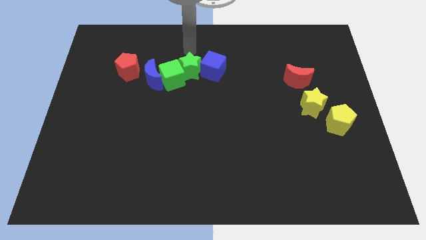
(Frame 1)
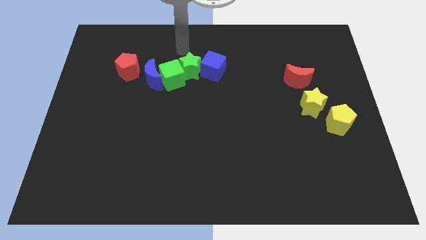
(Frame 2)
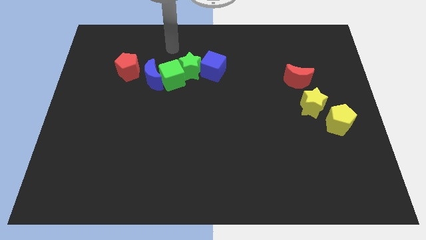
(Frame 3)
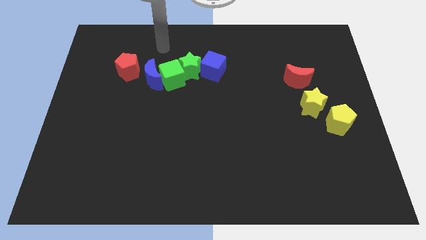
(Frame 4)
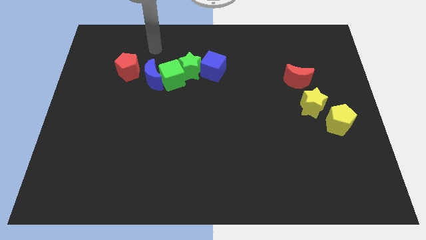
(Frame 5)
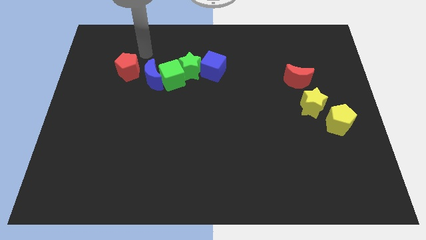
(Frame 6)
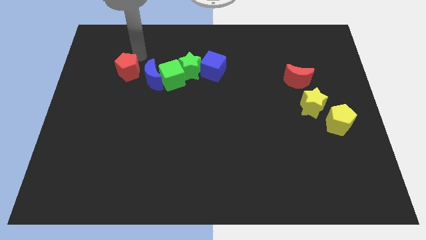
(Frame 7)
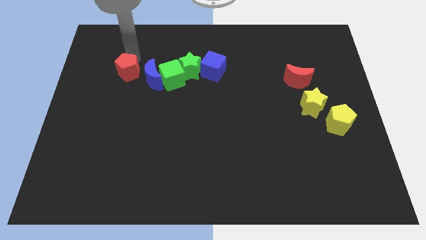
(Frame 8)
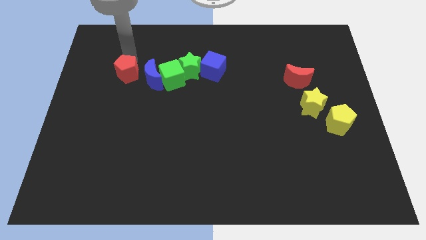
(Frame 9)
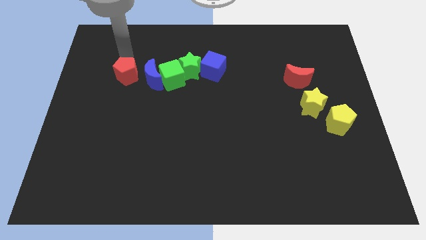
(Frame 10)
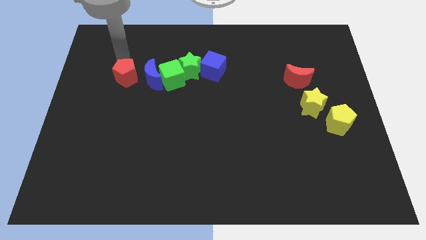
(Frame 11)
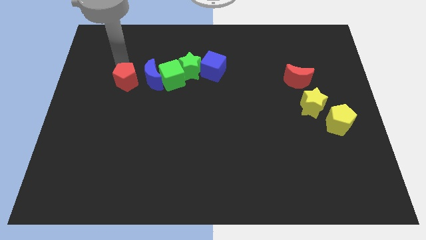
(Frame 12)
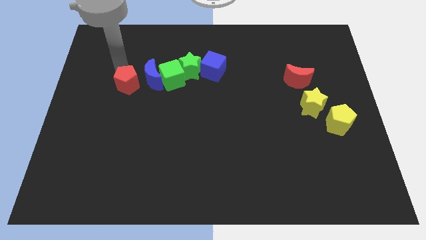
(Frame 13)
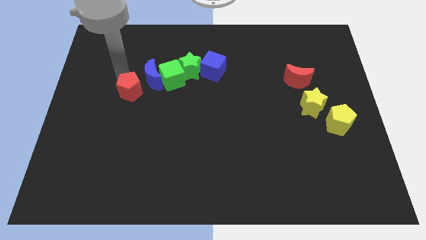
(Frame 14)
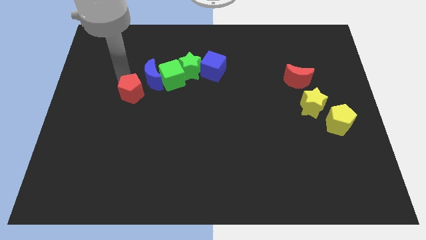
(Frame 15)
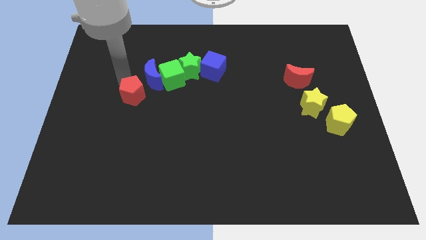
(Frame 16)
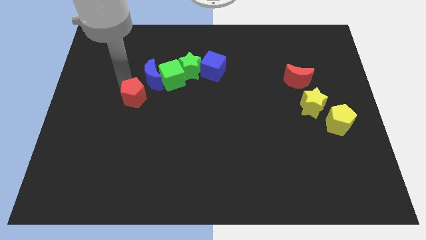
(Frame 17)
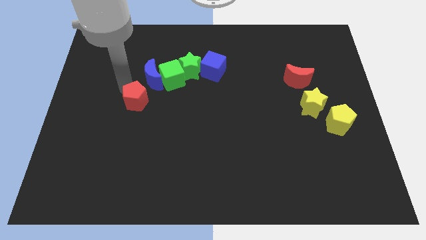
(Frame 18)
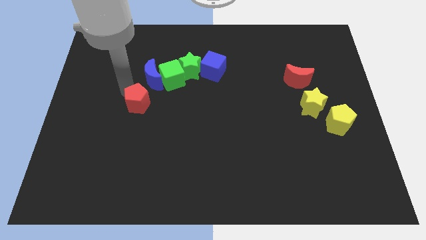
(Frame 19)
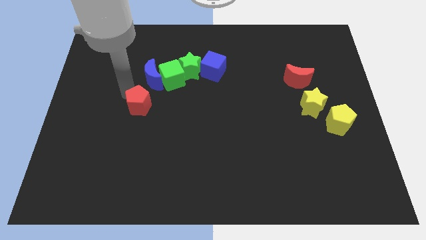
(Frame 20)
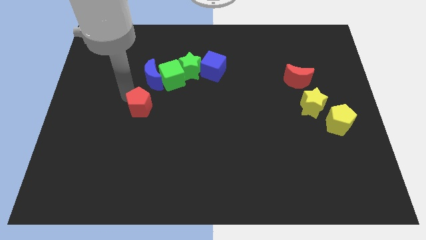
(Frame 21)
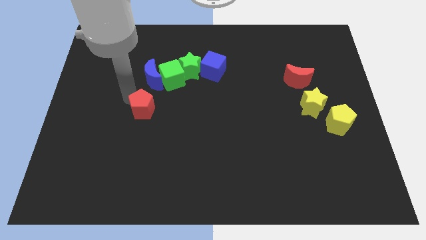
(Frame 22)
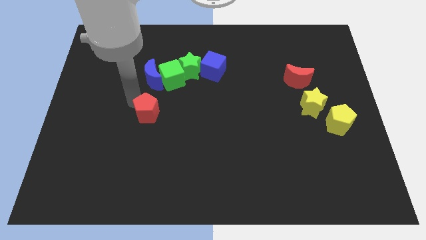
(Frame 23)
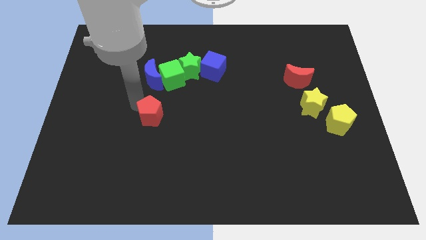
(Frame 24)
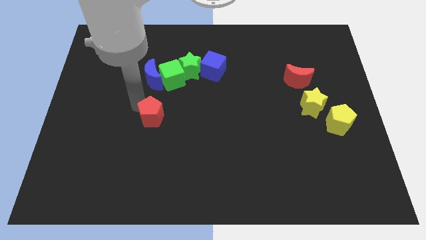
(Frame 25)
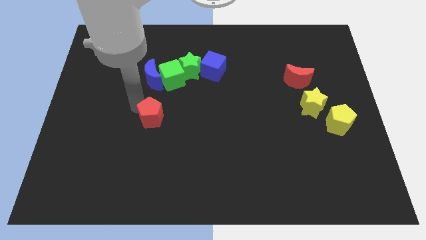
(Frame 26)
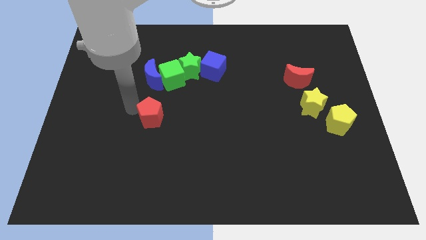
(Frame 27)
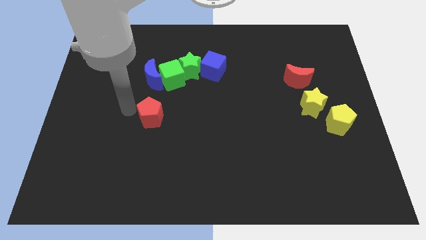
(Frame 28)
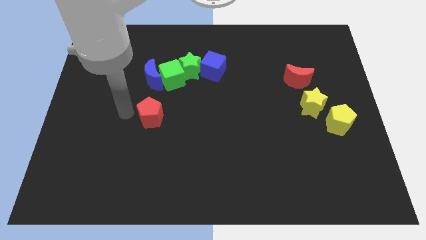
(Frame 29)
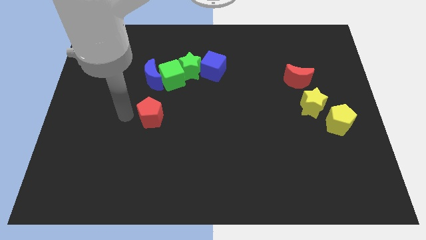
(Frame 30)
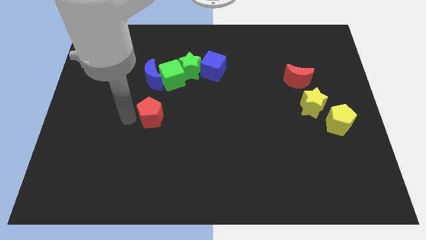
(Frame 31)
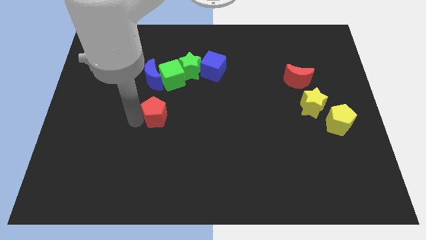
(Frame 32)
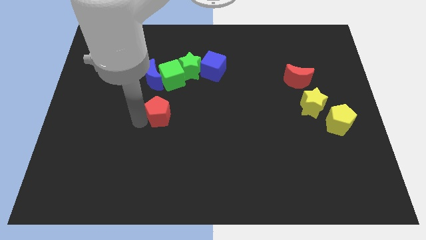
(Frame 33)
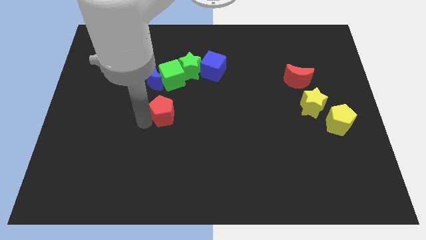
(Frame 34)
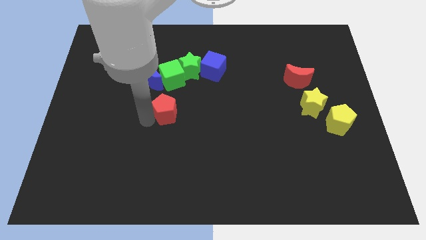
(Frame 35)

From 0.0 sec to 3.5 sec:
place the red pentagon below the blue cerscent

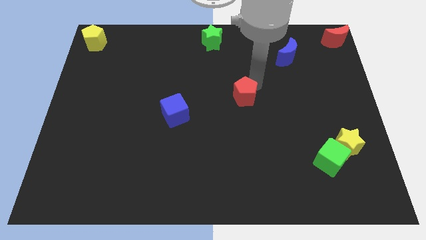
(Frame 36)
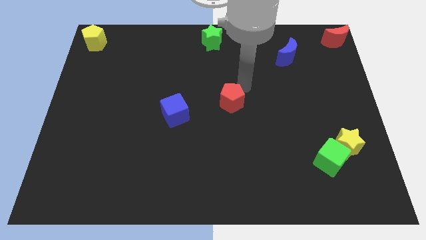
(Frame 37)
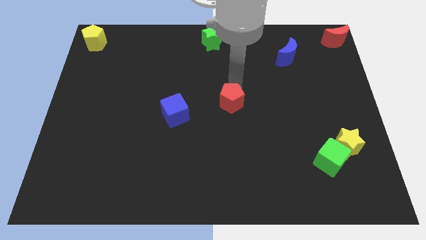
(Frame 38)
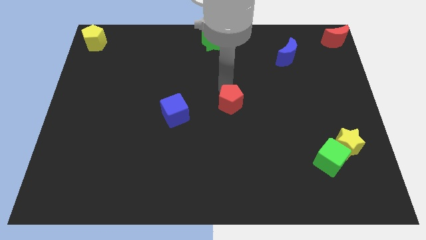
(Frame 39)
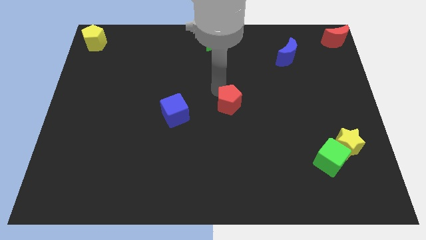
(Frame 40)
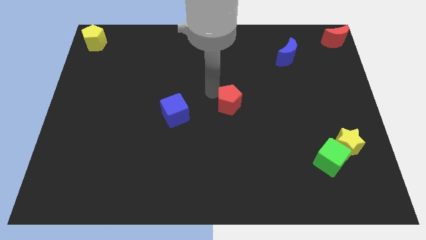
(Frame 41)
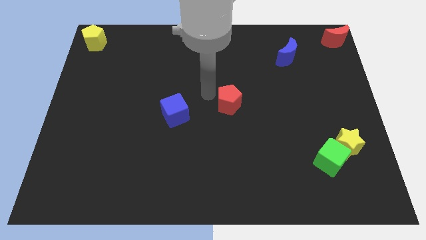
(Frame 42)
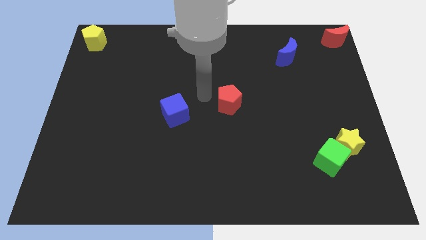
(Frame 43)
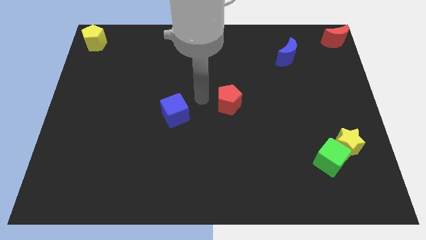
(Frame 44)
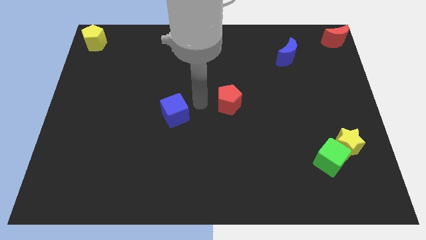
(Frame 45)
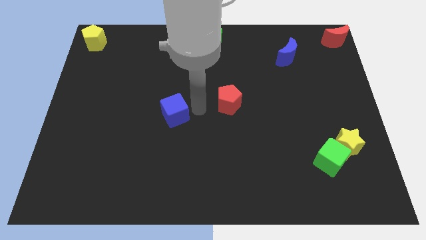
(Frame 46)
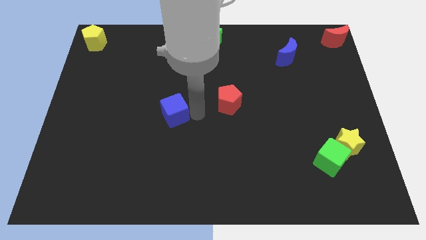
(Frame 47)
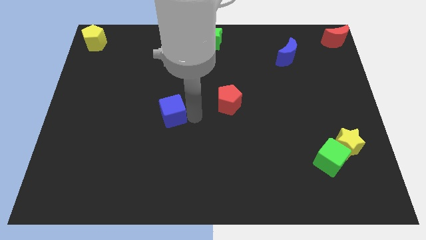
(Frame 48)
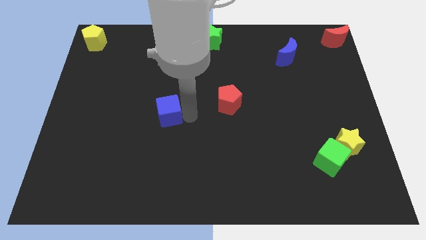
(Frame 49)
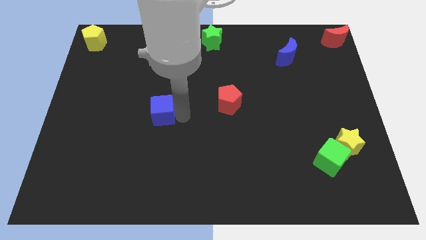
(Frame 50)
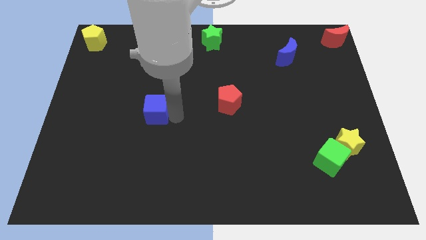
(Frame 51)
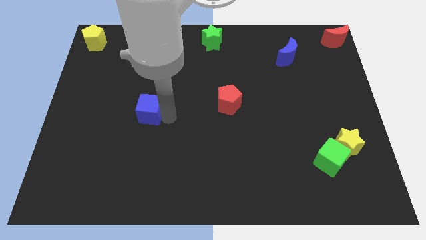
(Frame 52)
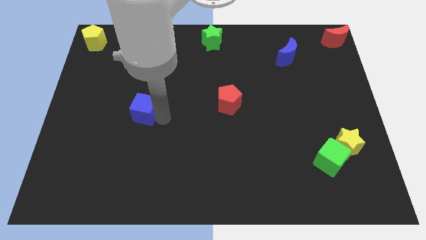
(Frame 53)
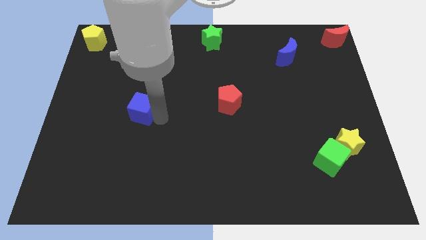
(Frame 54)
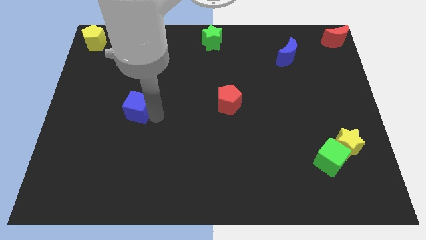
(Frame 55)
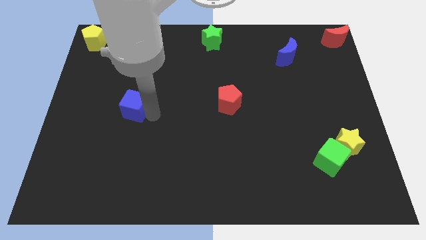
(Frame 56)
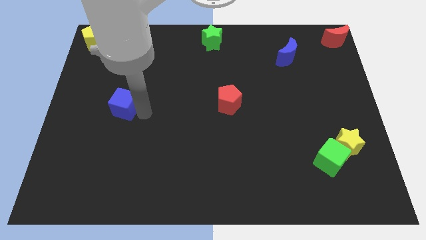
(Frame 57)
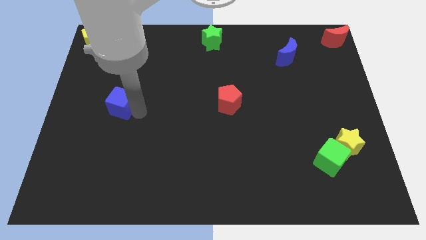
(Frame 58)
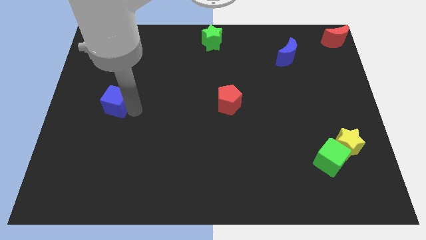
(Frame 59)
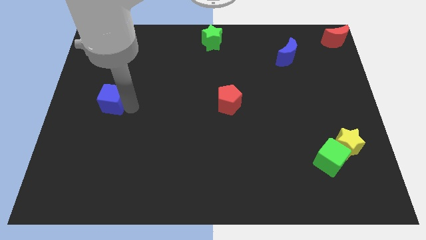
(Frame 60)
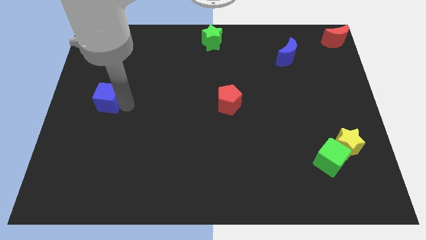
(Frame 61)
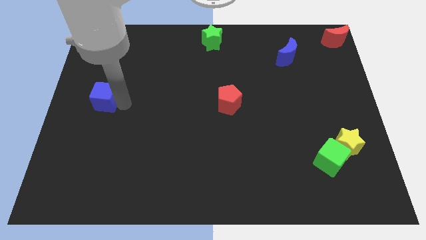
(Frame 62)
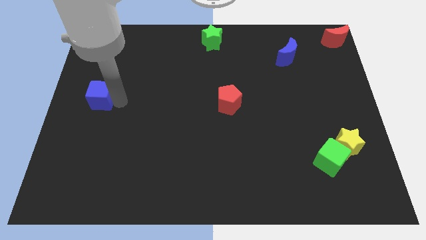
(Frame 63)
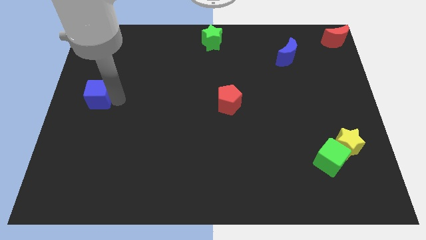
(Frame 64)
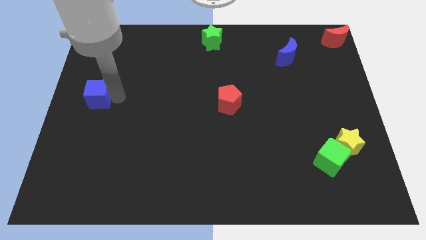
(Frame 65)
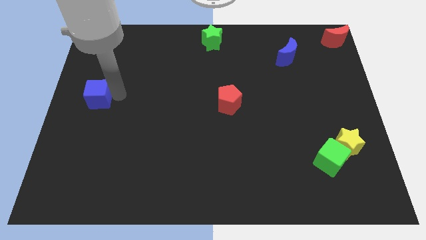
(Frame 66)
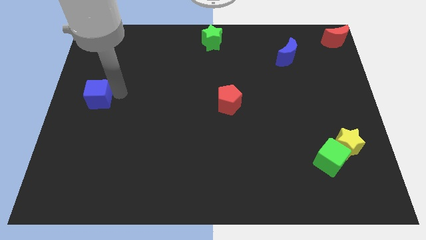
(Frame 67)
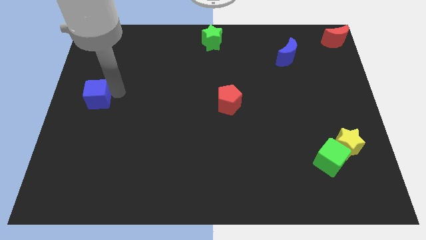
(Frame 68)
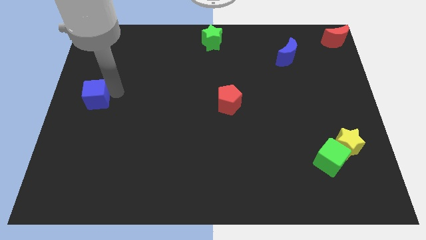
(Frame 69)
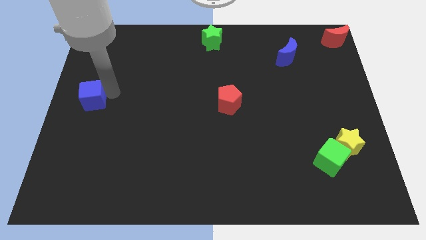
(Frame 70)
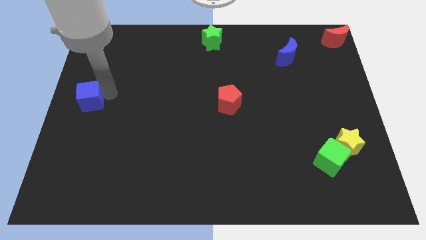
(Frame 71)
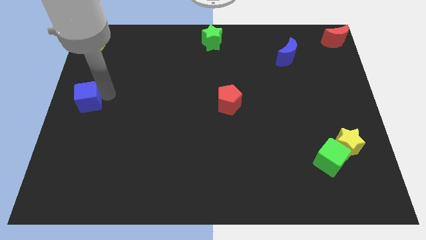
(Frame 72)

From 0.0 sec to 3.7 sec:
slide the blue cube underneath the yellow pentagon

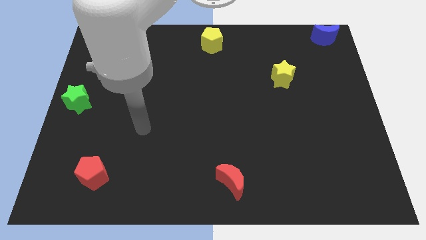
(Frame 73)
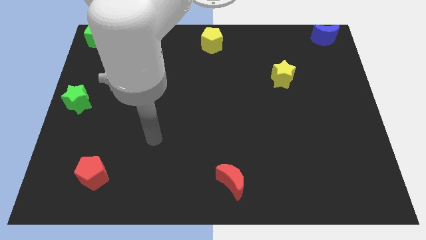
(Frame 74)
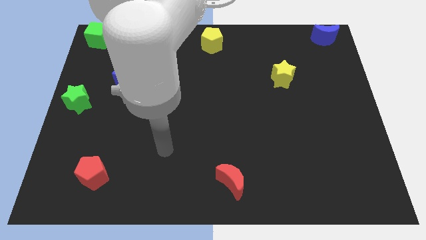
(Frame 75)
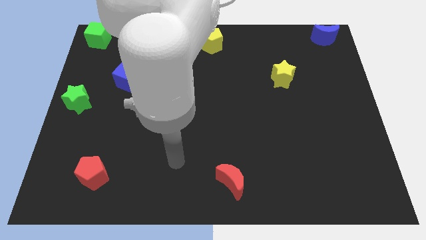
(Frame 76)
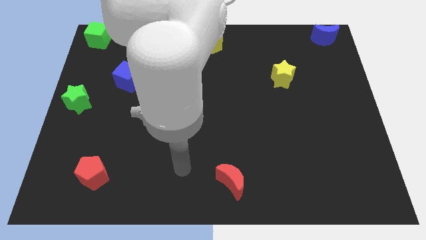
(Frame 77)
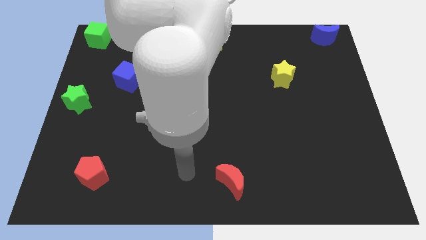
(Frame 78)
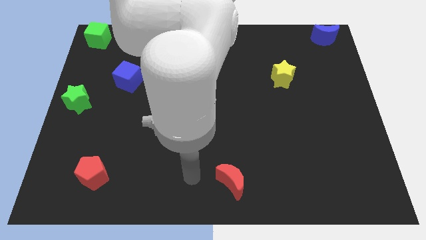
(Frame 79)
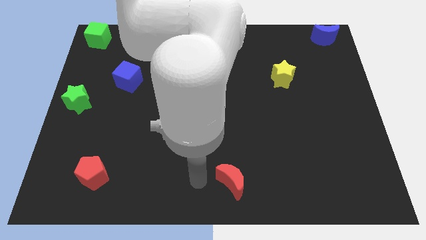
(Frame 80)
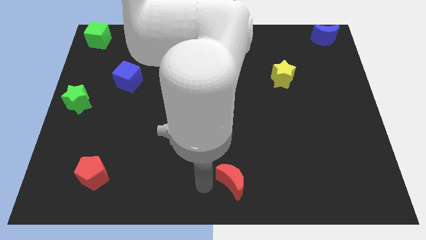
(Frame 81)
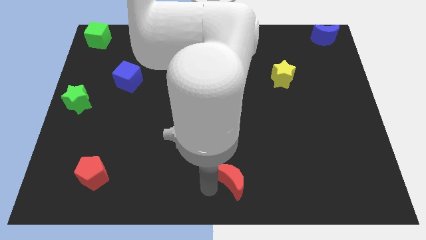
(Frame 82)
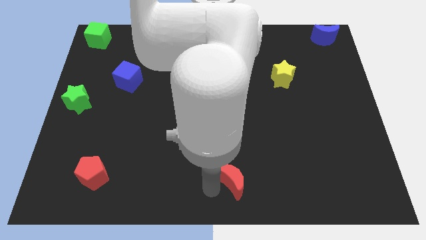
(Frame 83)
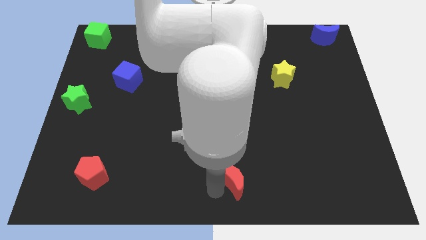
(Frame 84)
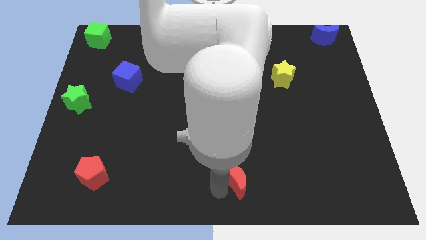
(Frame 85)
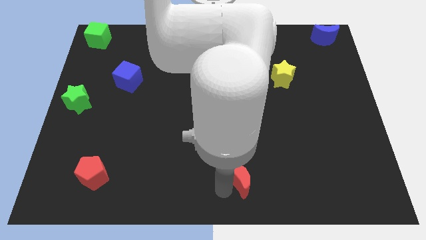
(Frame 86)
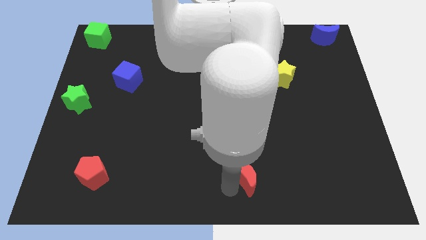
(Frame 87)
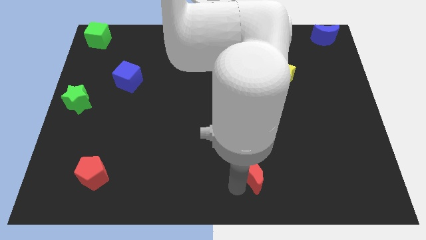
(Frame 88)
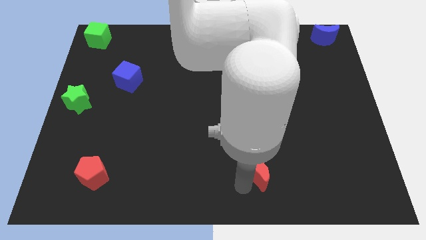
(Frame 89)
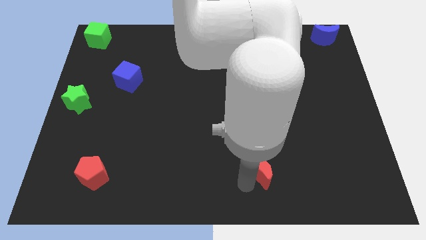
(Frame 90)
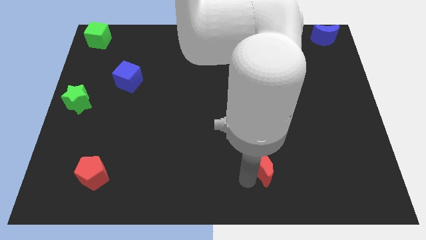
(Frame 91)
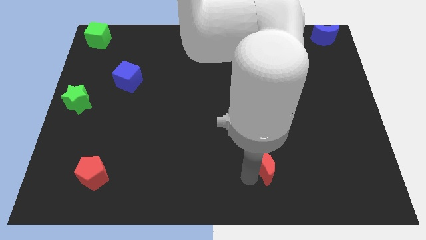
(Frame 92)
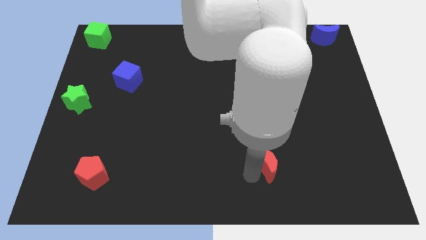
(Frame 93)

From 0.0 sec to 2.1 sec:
move your arm into the red crescent
